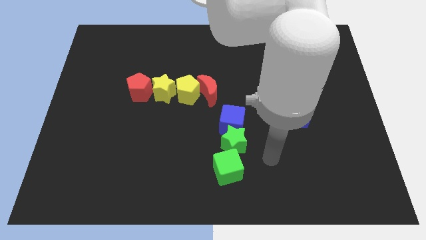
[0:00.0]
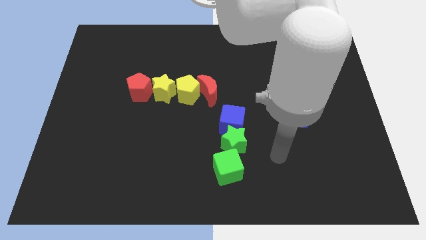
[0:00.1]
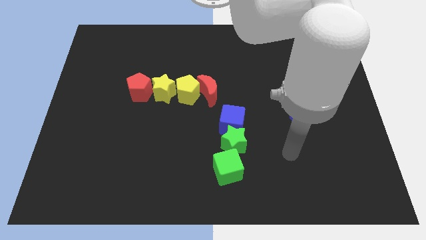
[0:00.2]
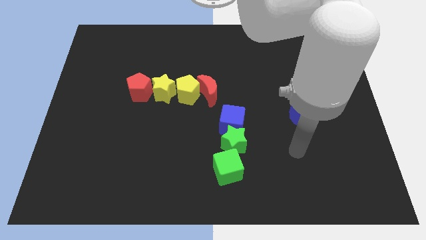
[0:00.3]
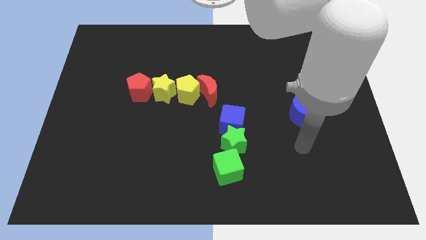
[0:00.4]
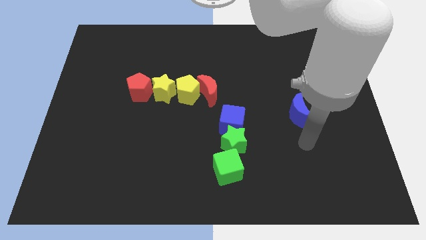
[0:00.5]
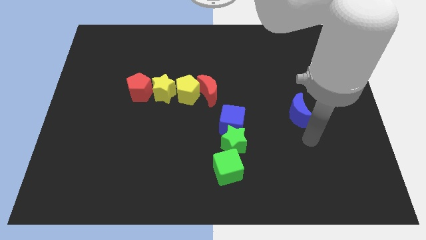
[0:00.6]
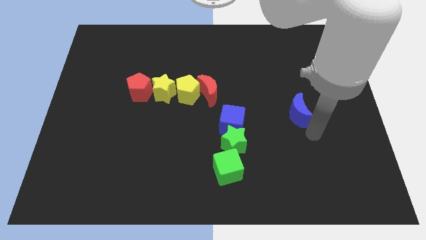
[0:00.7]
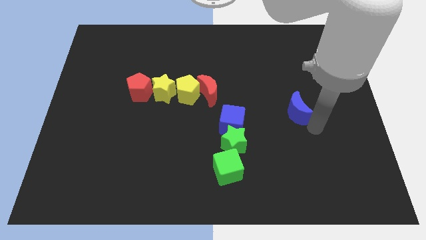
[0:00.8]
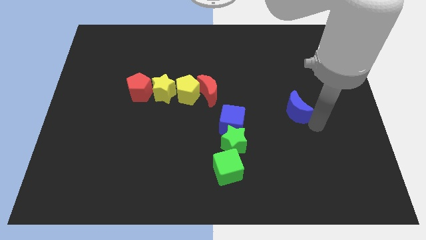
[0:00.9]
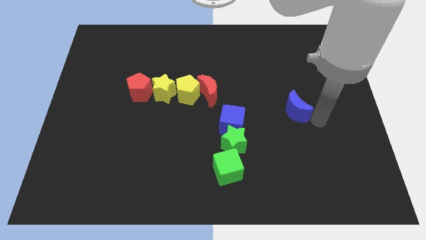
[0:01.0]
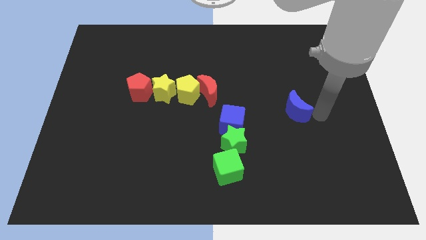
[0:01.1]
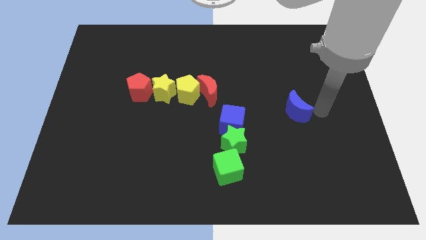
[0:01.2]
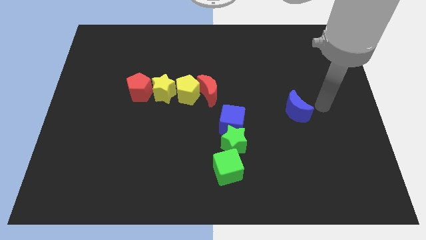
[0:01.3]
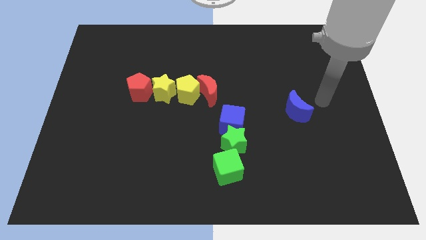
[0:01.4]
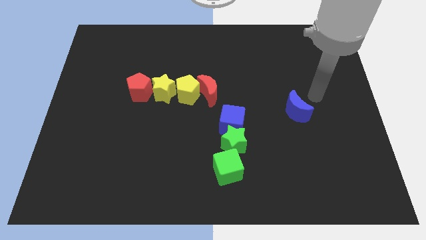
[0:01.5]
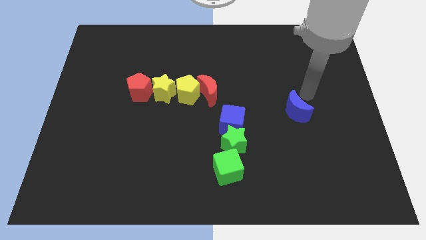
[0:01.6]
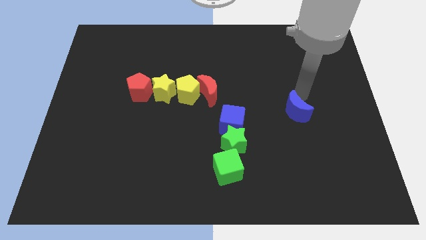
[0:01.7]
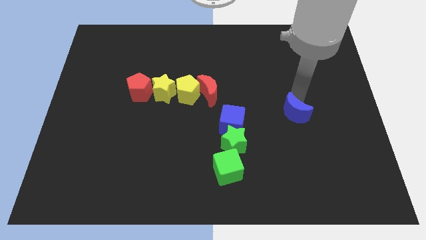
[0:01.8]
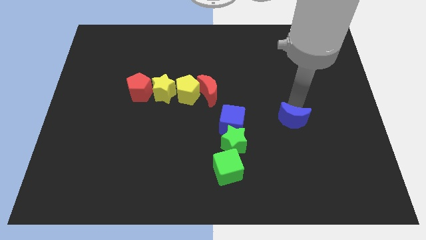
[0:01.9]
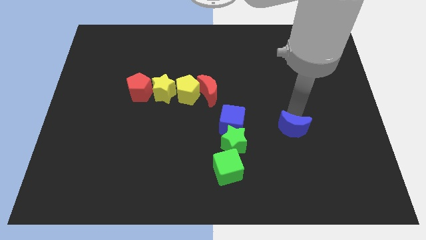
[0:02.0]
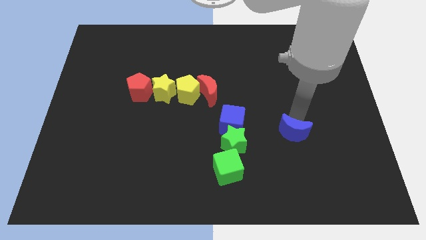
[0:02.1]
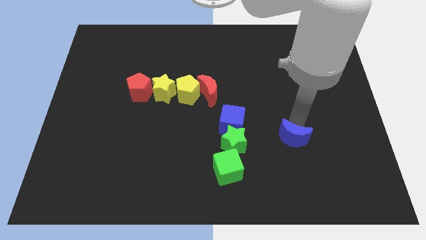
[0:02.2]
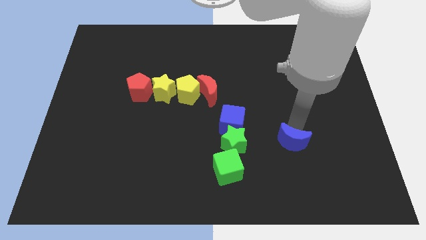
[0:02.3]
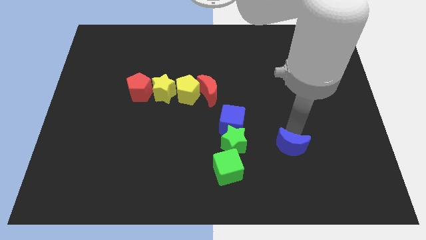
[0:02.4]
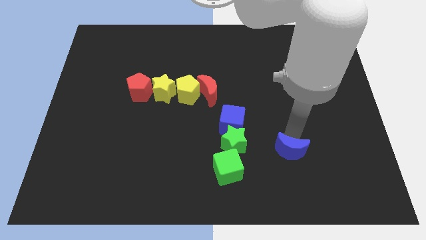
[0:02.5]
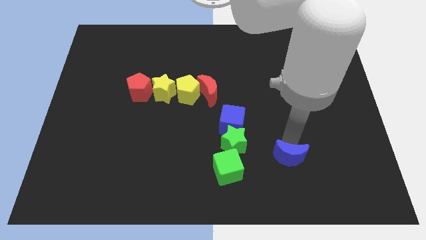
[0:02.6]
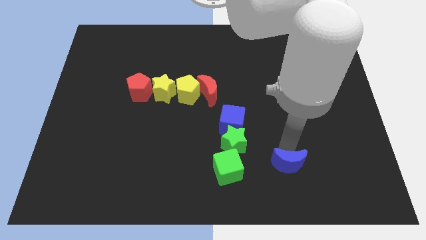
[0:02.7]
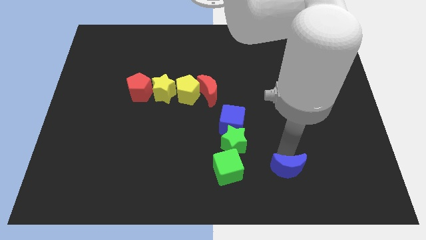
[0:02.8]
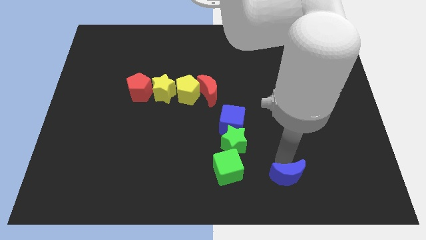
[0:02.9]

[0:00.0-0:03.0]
move blue crescent right to the green cube

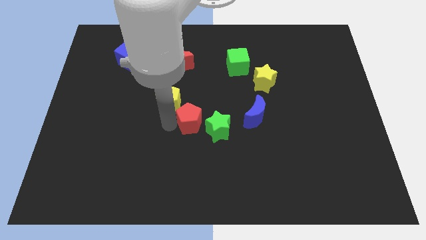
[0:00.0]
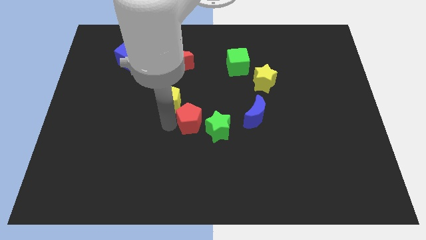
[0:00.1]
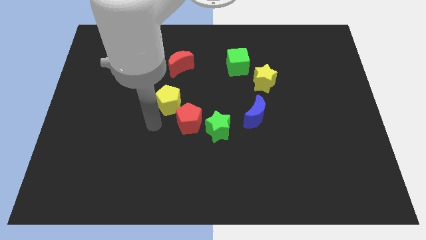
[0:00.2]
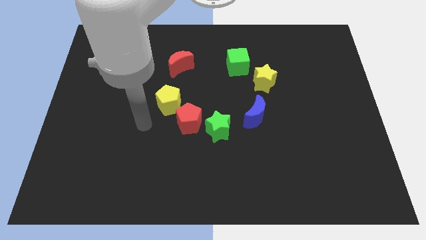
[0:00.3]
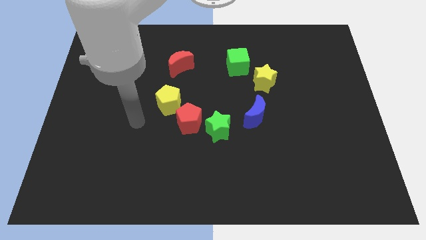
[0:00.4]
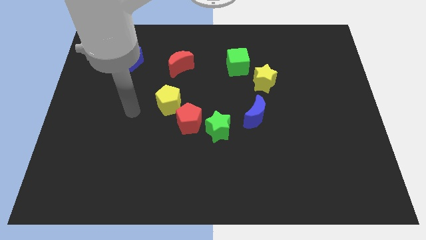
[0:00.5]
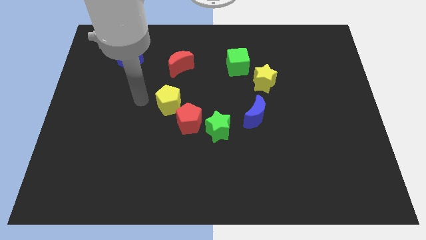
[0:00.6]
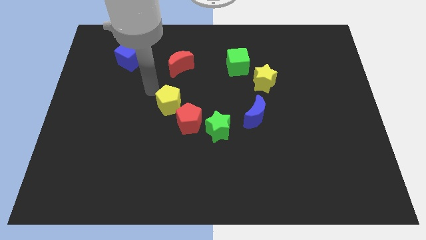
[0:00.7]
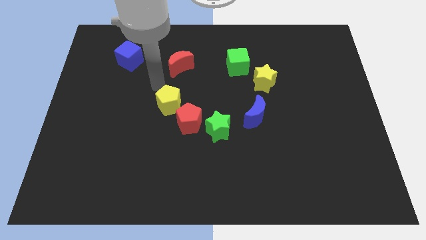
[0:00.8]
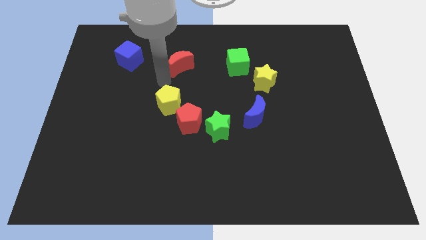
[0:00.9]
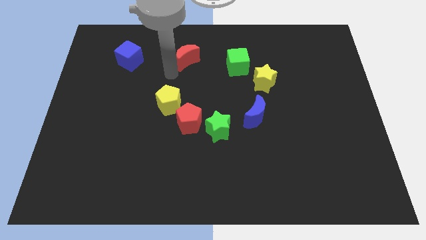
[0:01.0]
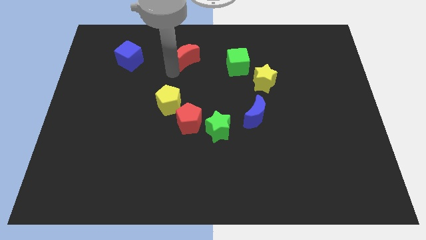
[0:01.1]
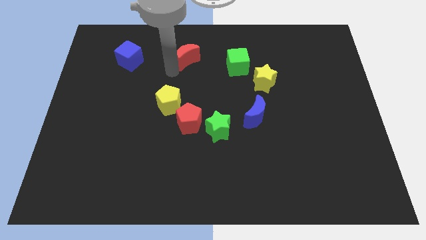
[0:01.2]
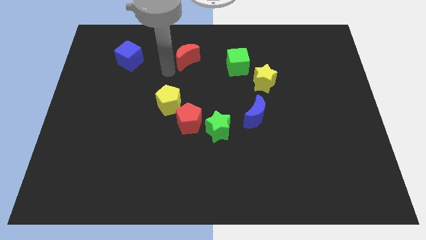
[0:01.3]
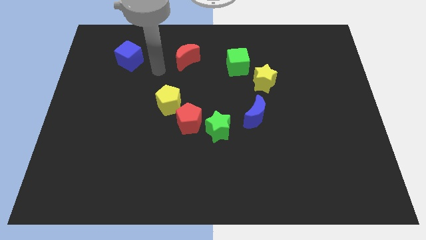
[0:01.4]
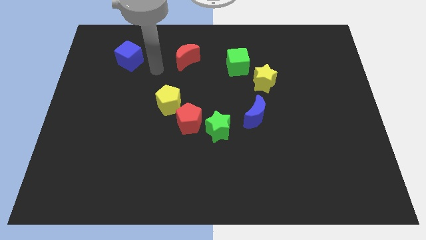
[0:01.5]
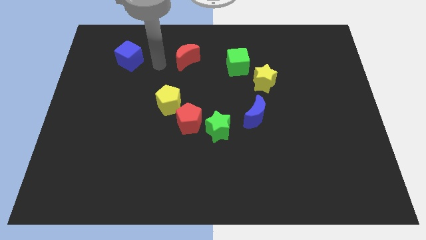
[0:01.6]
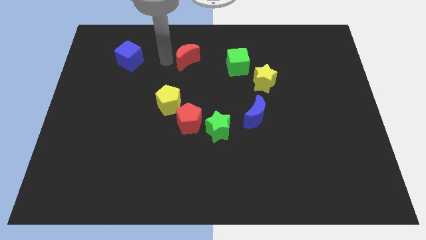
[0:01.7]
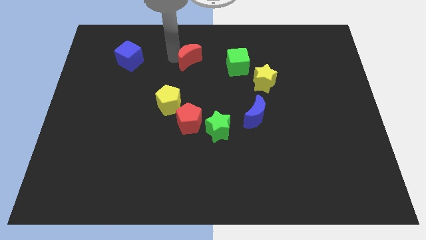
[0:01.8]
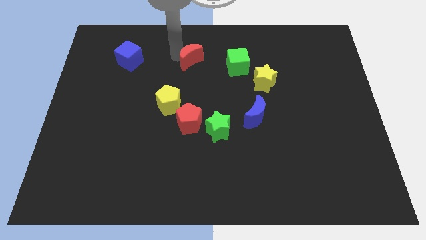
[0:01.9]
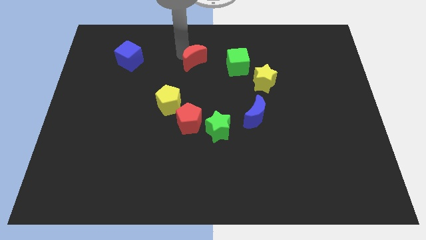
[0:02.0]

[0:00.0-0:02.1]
place the red crescent to the left of green cube

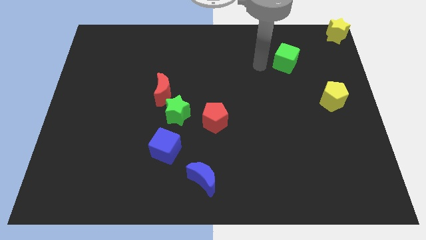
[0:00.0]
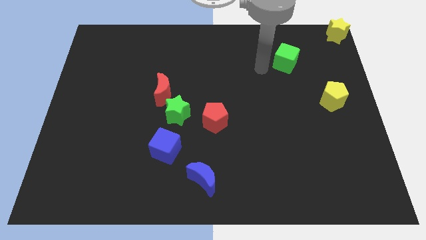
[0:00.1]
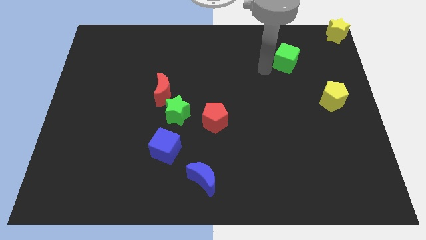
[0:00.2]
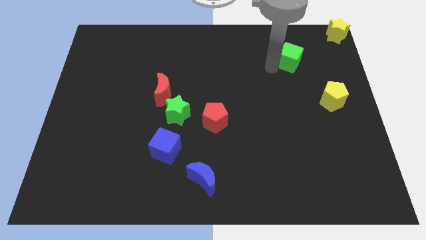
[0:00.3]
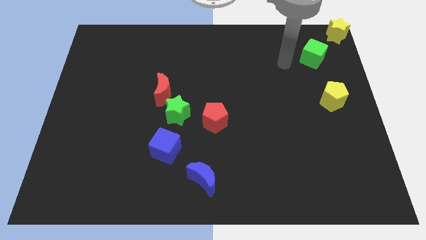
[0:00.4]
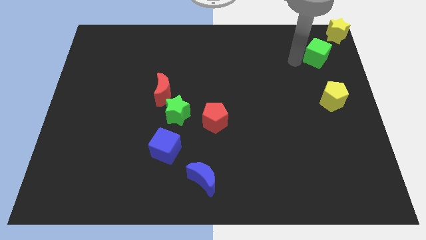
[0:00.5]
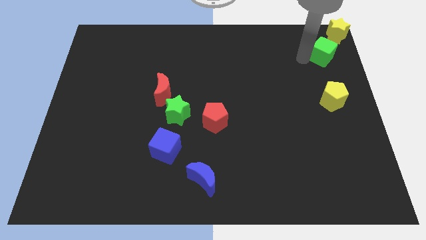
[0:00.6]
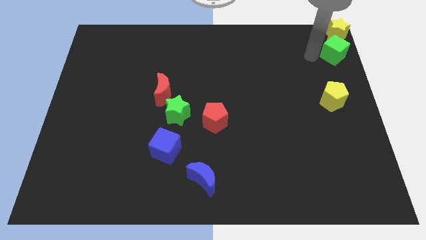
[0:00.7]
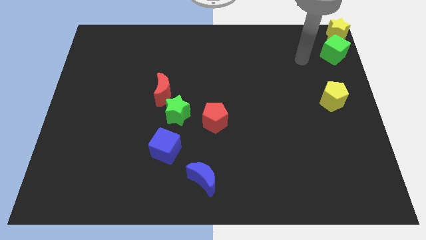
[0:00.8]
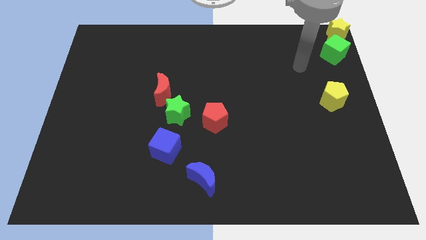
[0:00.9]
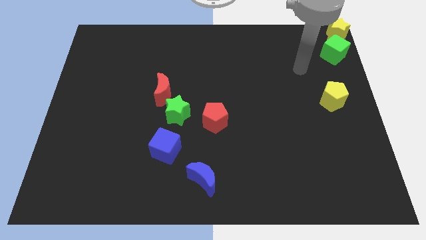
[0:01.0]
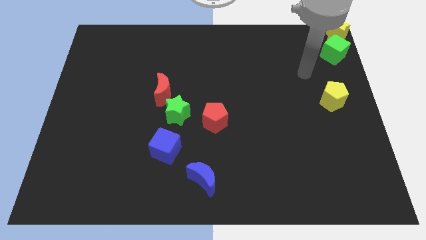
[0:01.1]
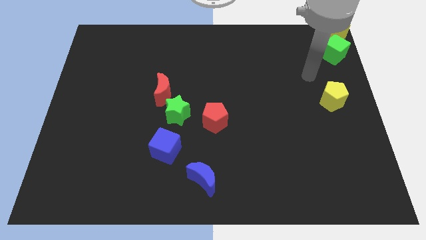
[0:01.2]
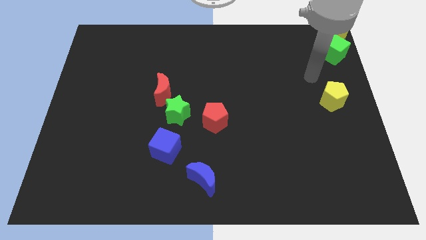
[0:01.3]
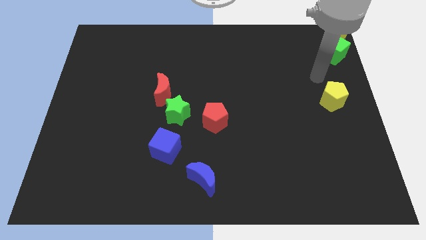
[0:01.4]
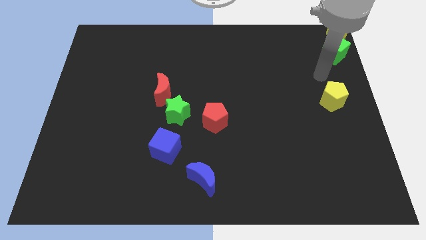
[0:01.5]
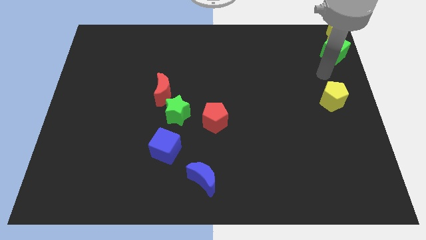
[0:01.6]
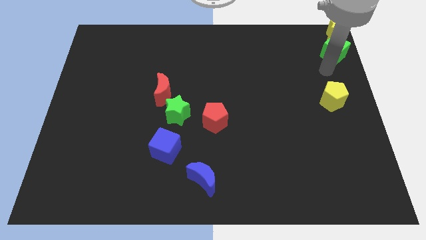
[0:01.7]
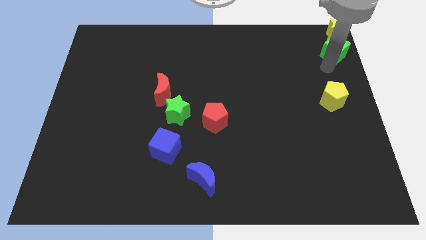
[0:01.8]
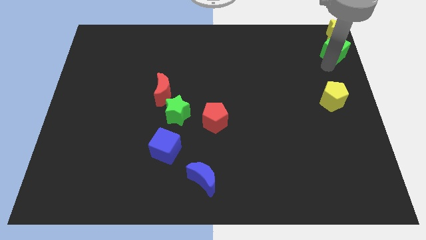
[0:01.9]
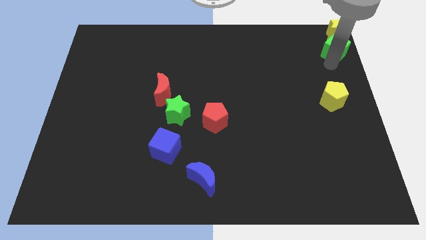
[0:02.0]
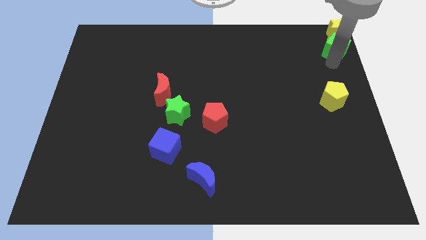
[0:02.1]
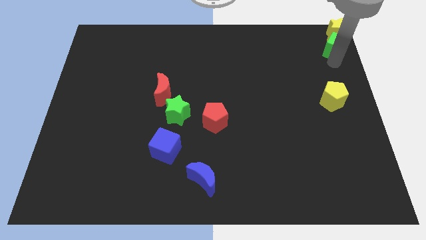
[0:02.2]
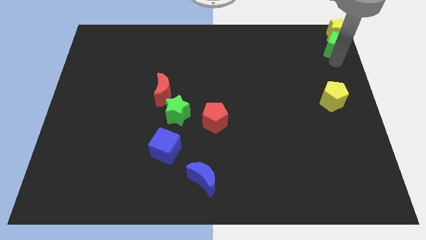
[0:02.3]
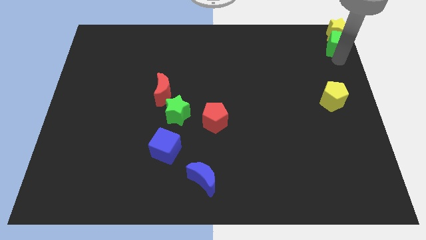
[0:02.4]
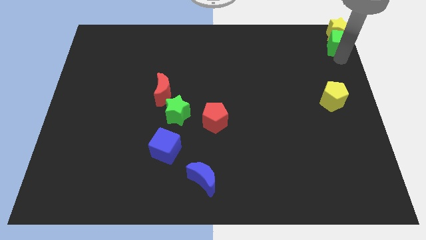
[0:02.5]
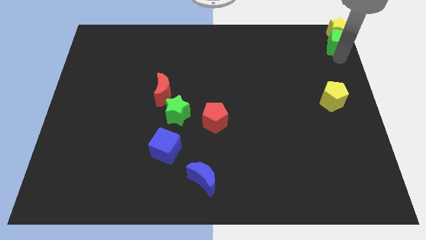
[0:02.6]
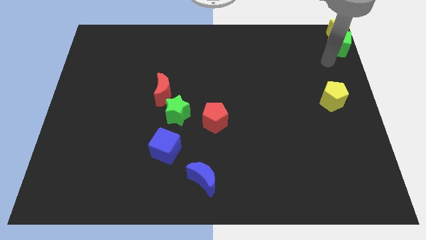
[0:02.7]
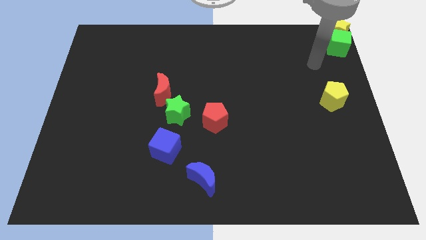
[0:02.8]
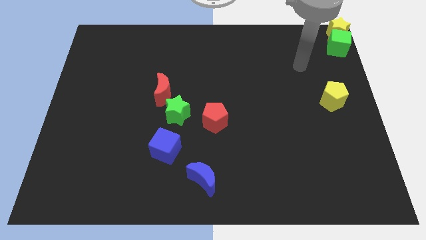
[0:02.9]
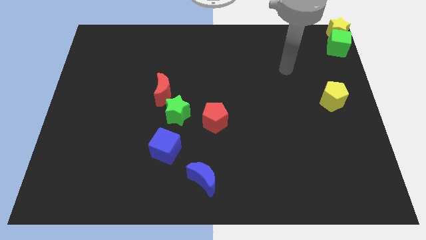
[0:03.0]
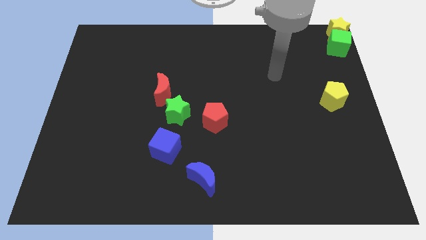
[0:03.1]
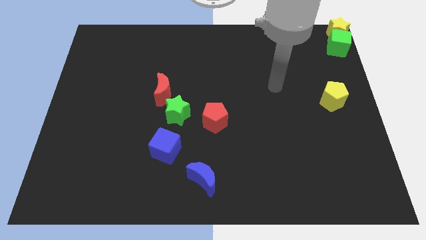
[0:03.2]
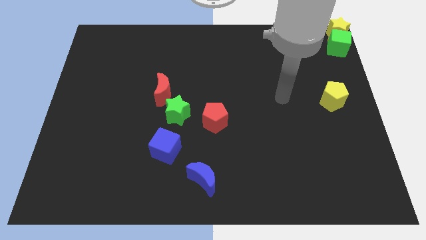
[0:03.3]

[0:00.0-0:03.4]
put the green cube at the bottom of the yellow star

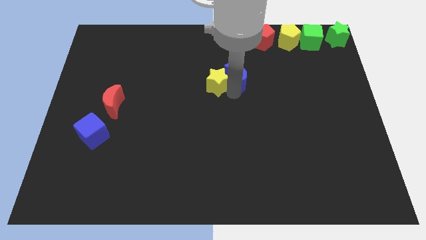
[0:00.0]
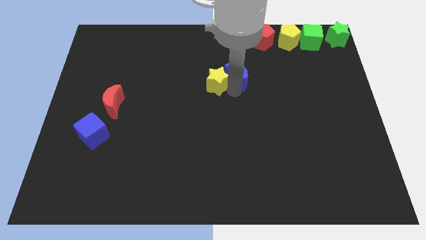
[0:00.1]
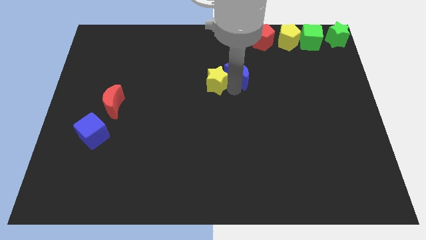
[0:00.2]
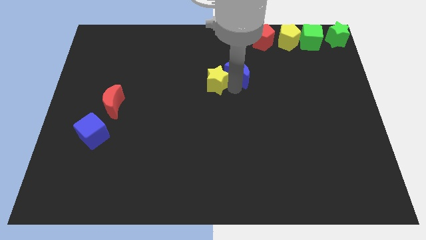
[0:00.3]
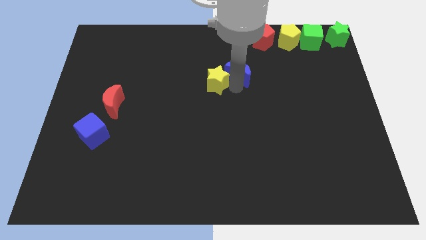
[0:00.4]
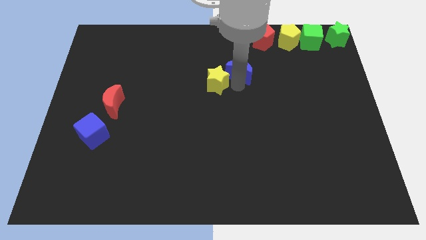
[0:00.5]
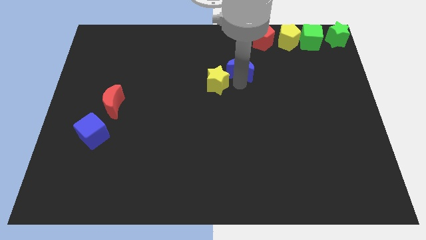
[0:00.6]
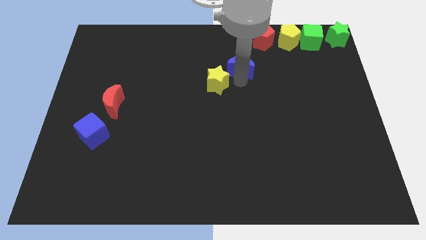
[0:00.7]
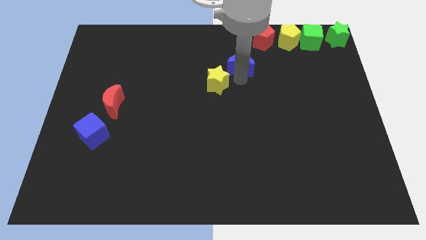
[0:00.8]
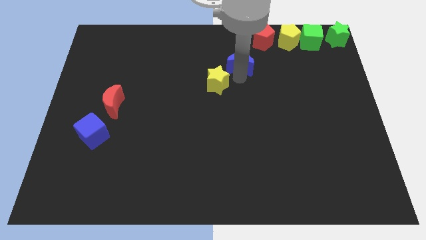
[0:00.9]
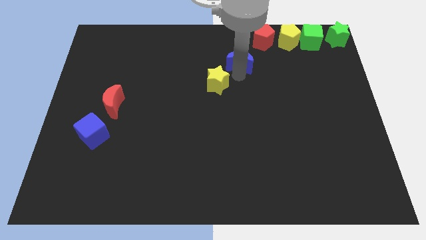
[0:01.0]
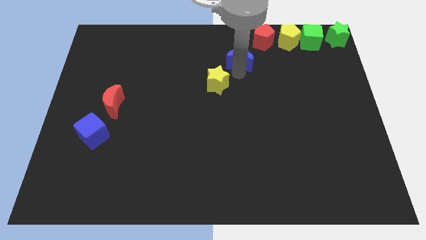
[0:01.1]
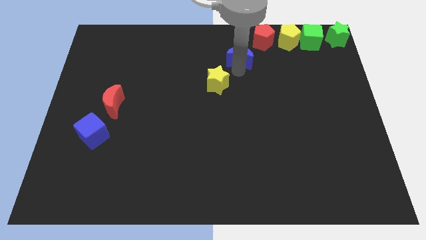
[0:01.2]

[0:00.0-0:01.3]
seperate the blue crescent from the yellow star
